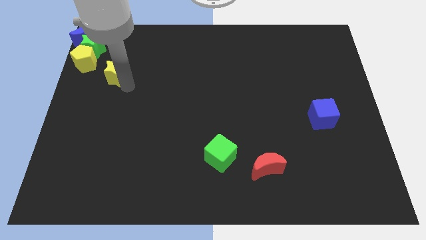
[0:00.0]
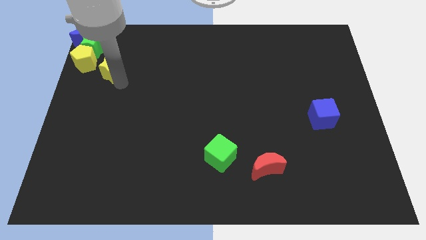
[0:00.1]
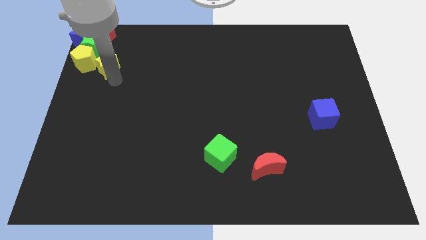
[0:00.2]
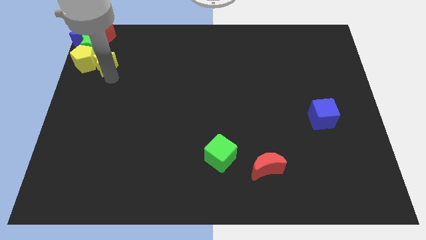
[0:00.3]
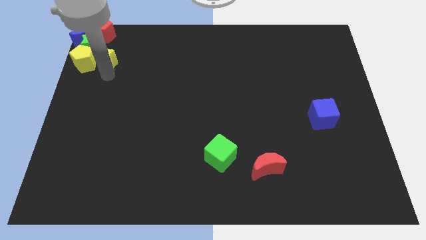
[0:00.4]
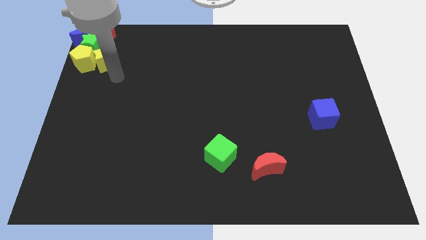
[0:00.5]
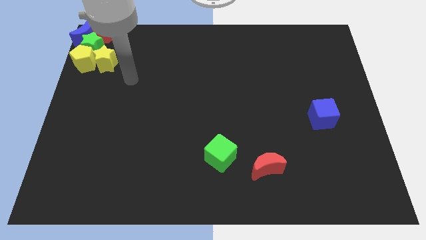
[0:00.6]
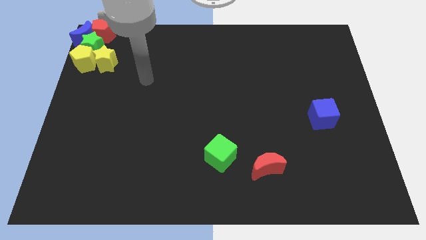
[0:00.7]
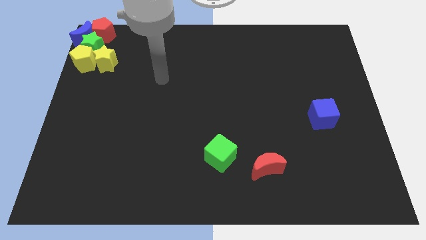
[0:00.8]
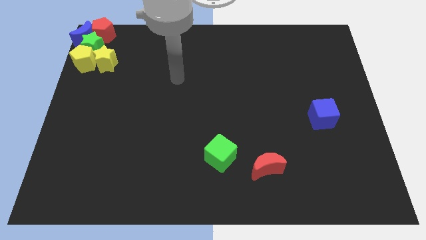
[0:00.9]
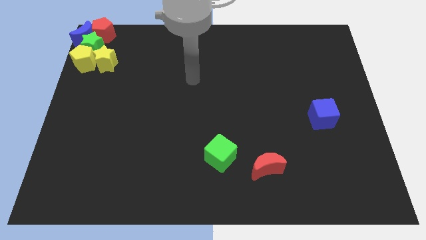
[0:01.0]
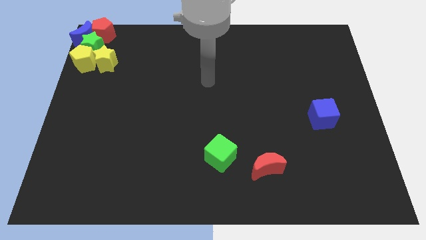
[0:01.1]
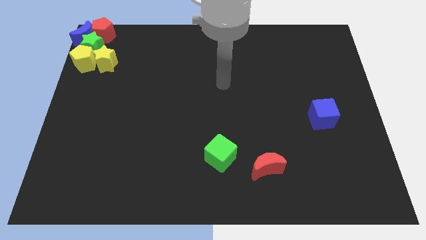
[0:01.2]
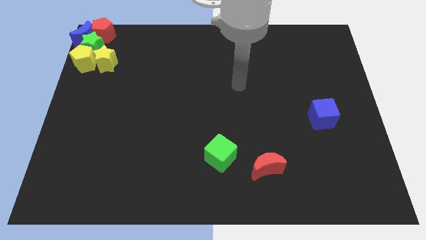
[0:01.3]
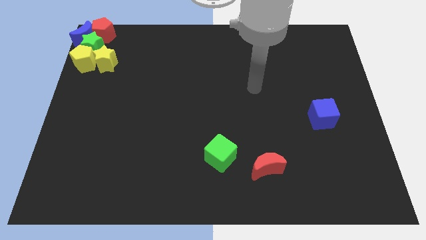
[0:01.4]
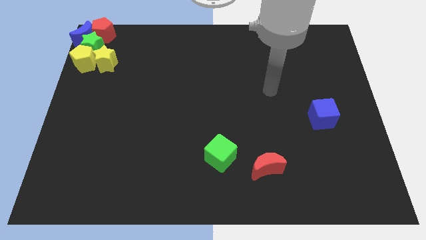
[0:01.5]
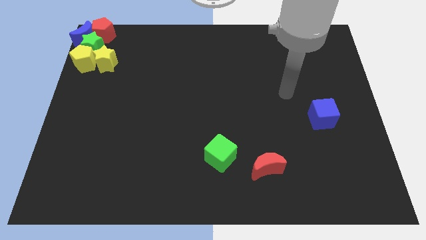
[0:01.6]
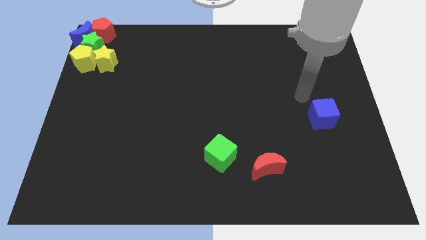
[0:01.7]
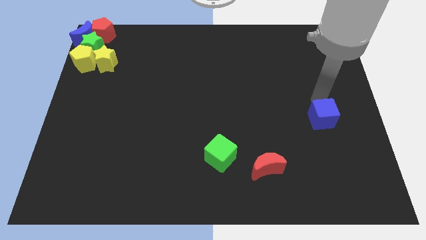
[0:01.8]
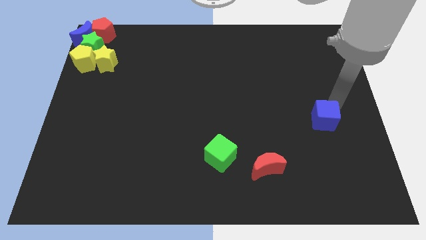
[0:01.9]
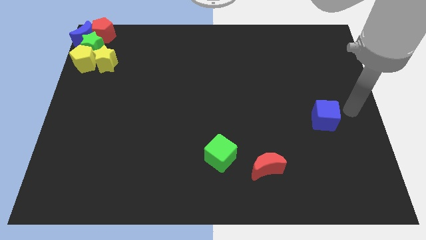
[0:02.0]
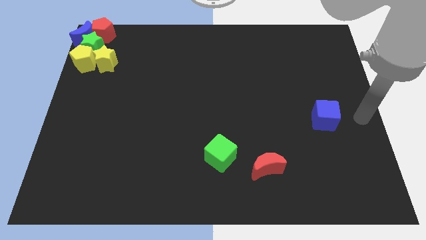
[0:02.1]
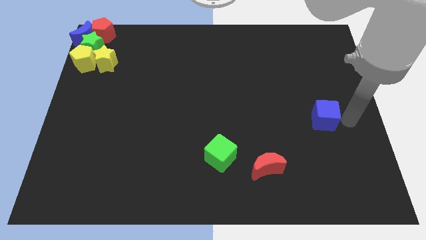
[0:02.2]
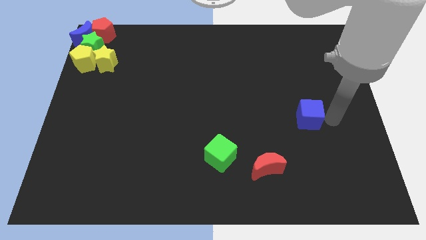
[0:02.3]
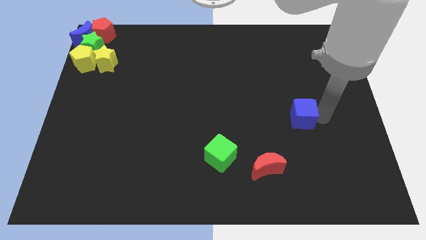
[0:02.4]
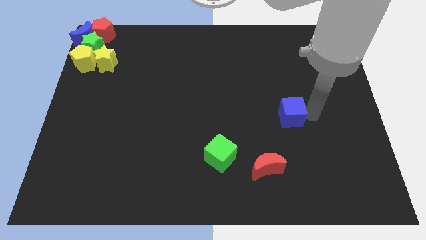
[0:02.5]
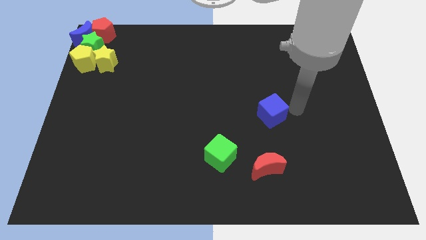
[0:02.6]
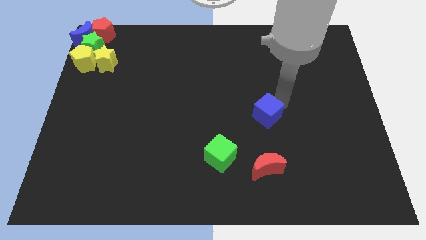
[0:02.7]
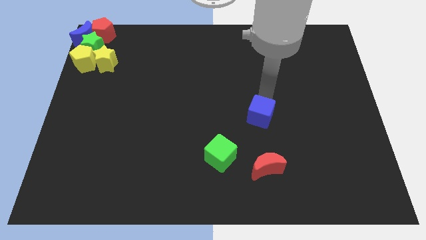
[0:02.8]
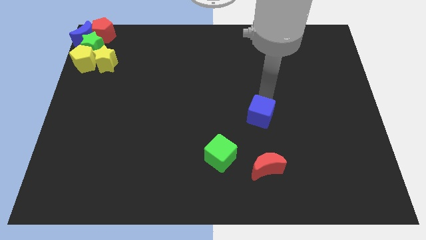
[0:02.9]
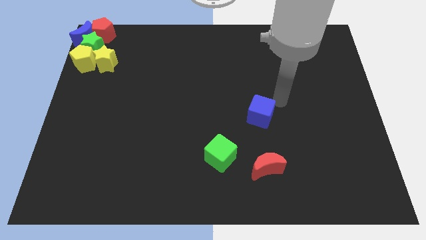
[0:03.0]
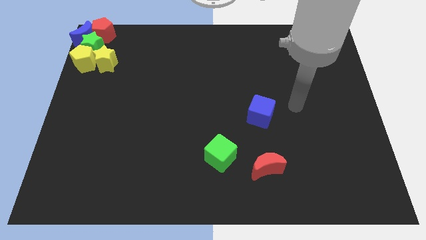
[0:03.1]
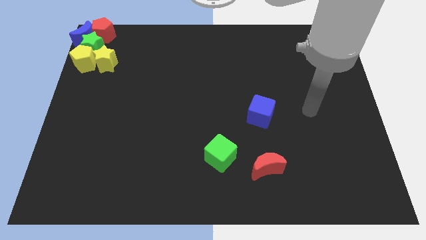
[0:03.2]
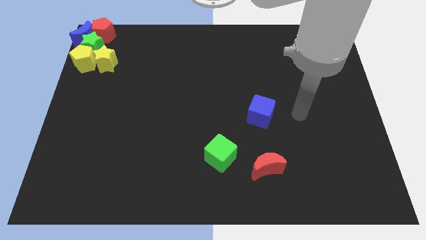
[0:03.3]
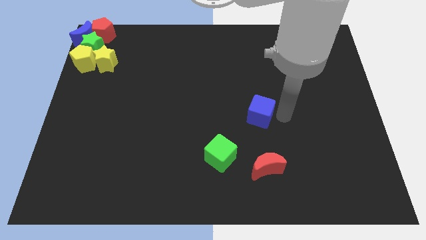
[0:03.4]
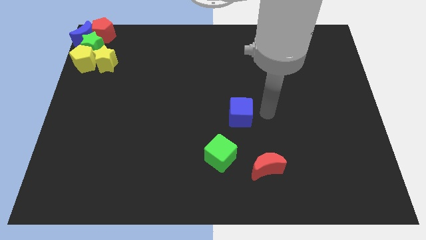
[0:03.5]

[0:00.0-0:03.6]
slide the blue cube to the top side of the red moon

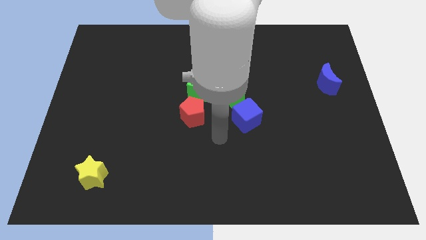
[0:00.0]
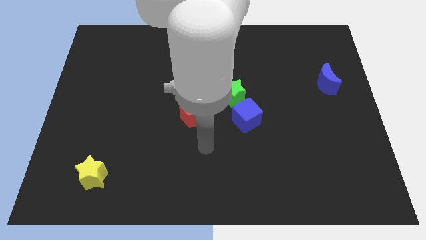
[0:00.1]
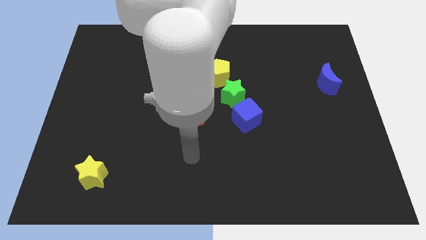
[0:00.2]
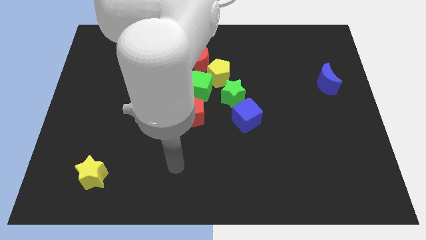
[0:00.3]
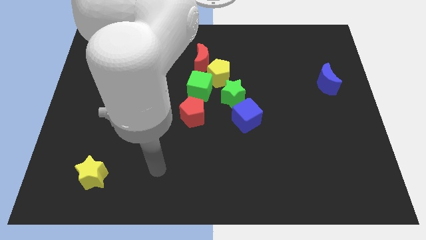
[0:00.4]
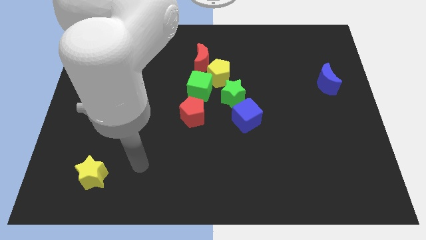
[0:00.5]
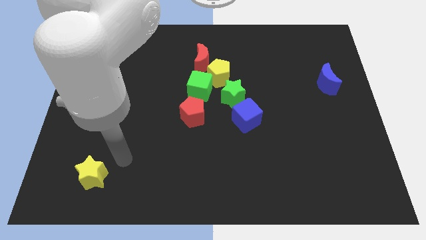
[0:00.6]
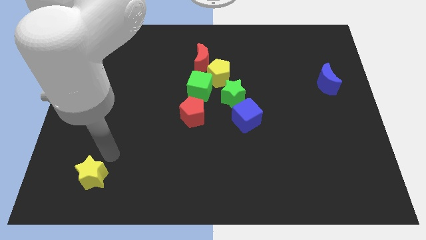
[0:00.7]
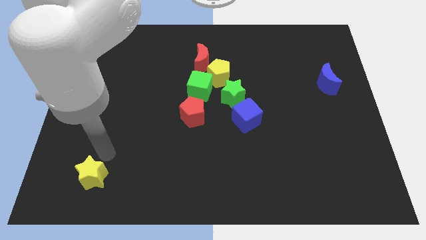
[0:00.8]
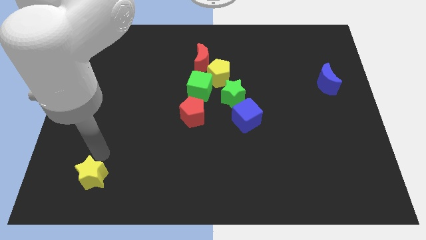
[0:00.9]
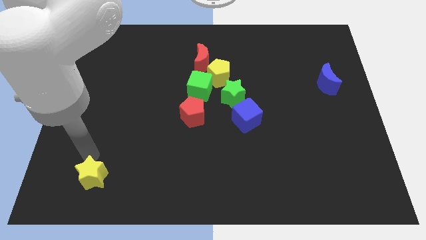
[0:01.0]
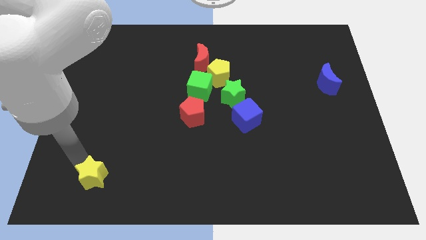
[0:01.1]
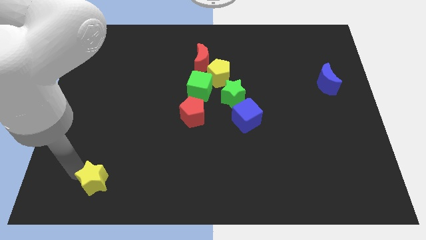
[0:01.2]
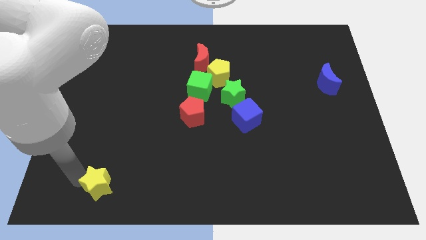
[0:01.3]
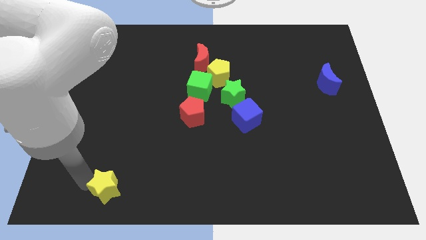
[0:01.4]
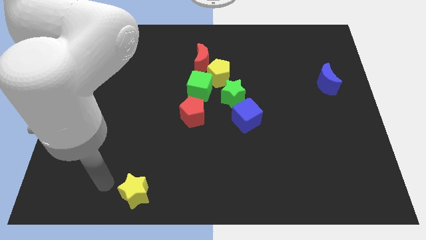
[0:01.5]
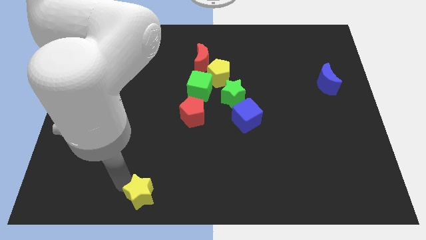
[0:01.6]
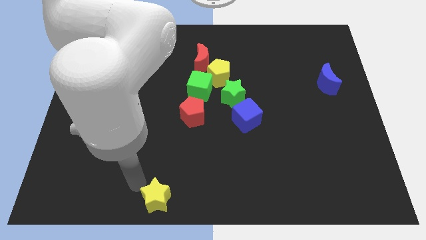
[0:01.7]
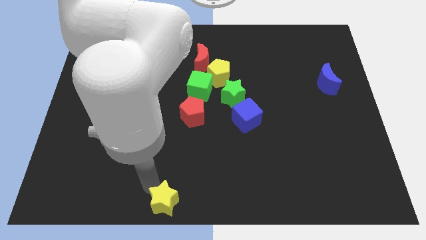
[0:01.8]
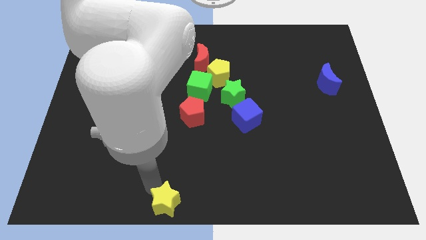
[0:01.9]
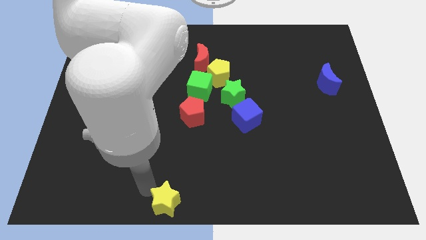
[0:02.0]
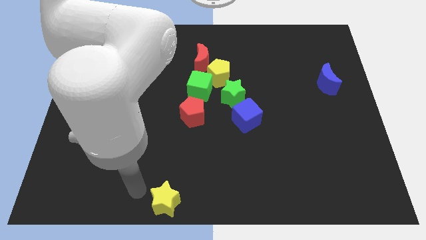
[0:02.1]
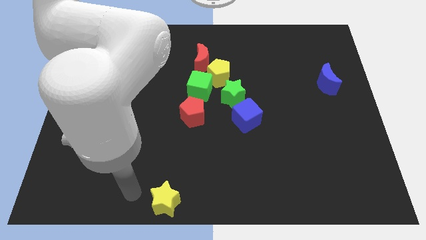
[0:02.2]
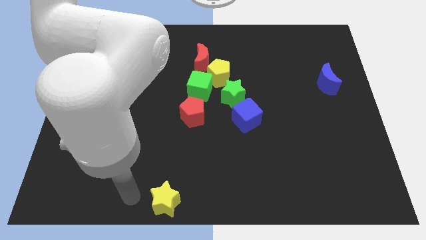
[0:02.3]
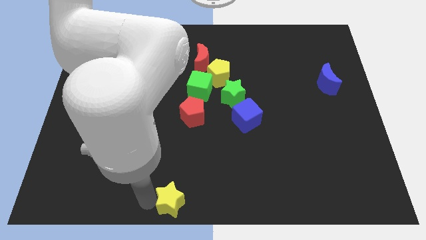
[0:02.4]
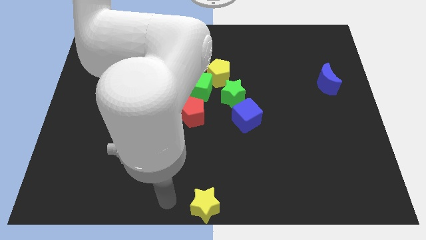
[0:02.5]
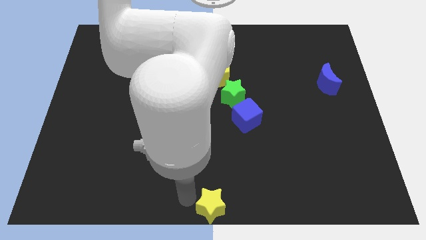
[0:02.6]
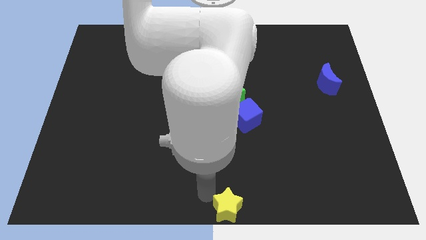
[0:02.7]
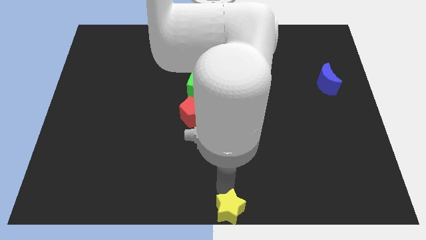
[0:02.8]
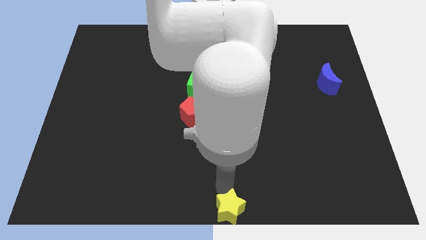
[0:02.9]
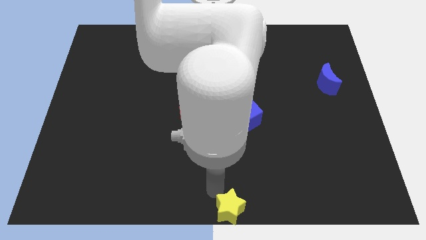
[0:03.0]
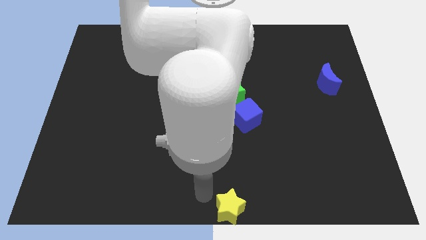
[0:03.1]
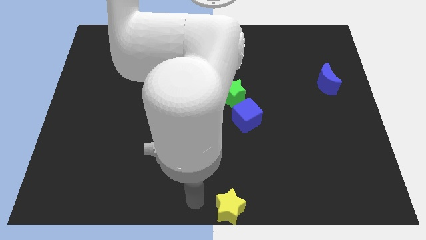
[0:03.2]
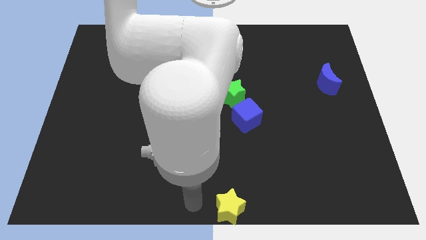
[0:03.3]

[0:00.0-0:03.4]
push the yellow star to the bottom center of the board

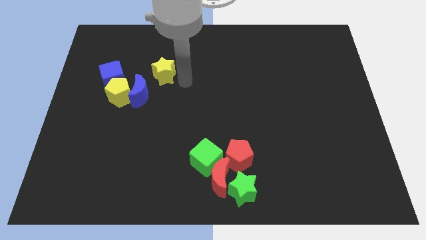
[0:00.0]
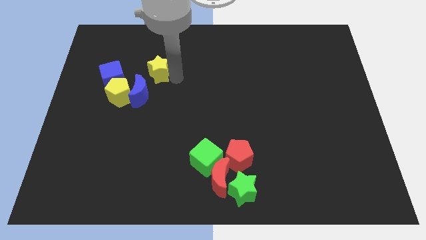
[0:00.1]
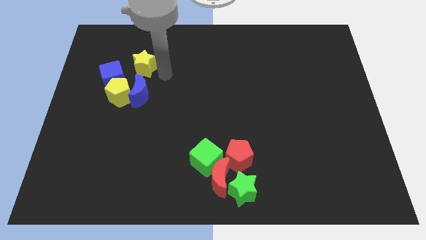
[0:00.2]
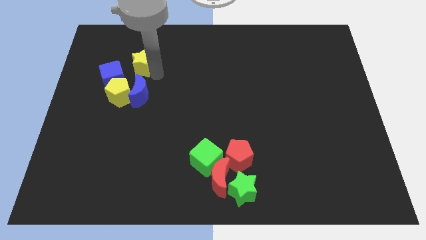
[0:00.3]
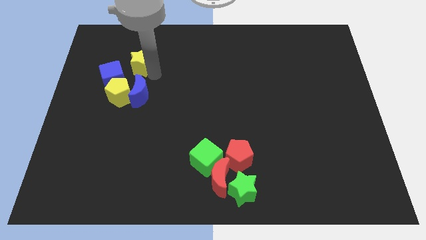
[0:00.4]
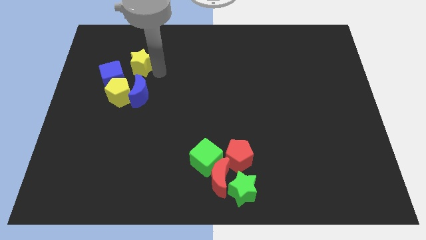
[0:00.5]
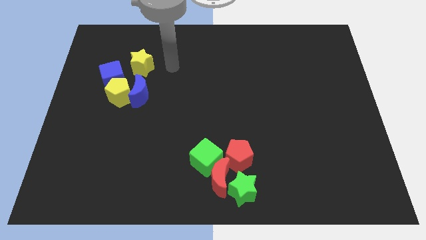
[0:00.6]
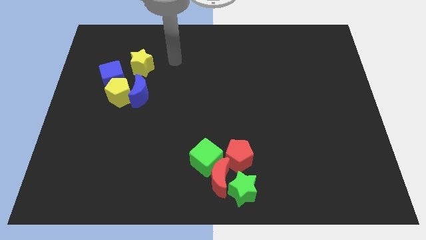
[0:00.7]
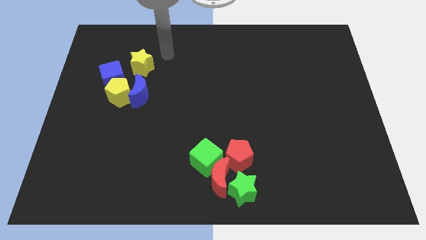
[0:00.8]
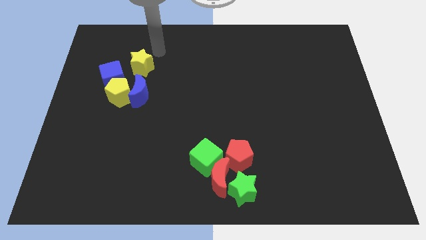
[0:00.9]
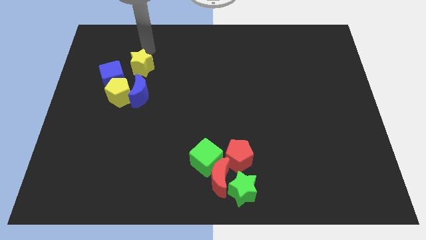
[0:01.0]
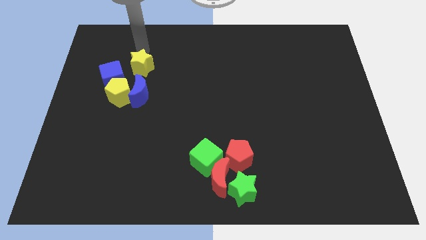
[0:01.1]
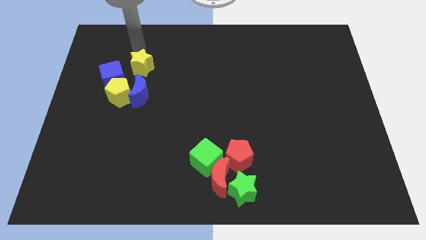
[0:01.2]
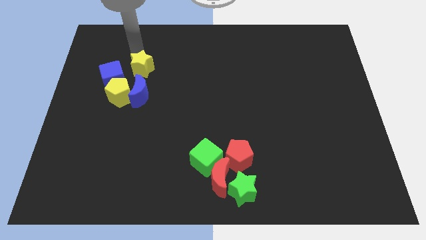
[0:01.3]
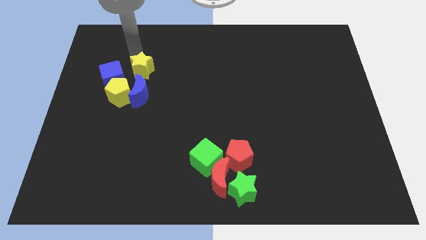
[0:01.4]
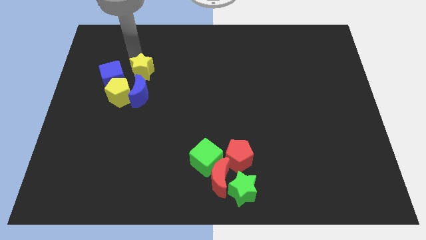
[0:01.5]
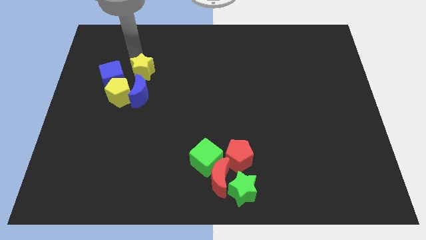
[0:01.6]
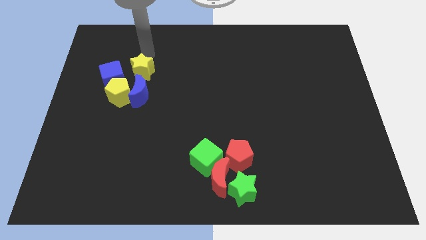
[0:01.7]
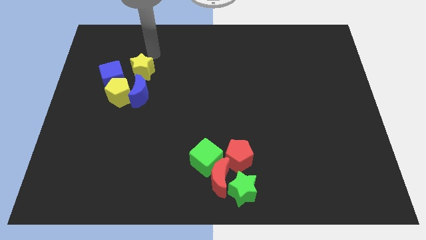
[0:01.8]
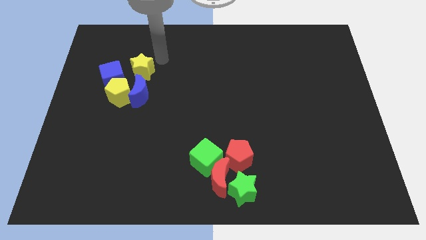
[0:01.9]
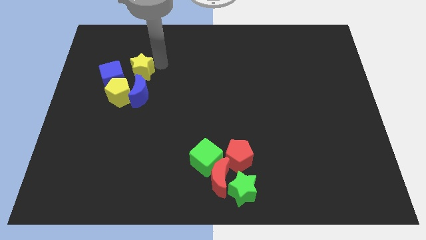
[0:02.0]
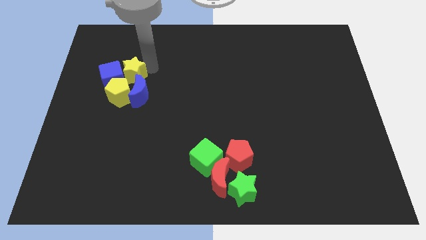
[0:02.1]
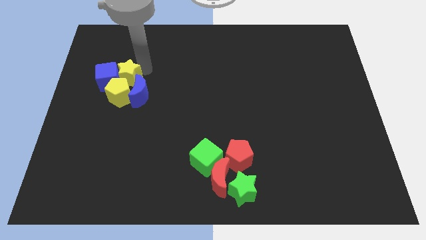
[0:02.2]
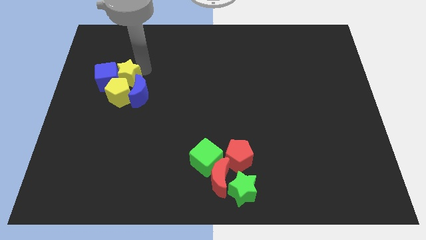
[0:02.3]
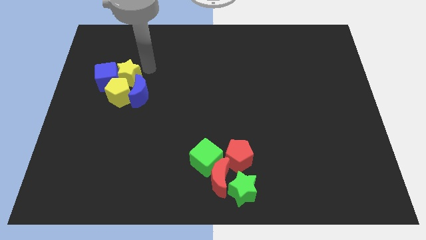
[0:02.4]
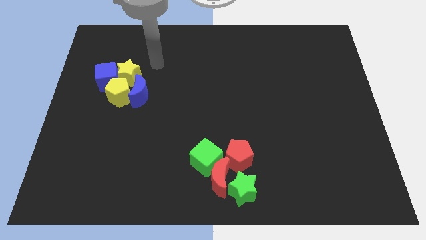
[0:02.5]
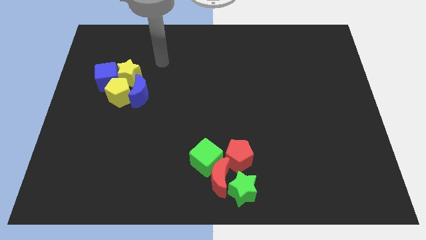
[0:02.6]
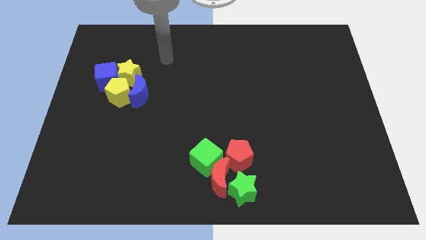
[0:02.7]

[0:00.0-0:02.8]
push the yellow star into the blue cube
